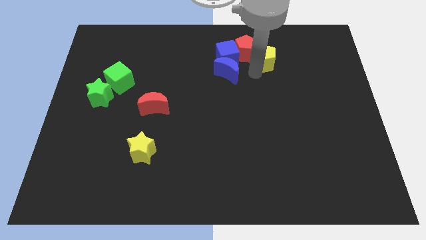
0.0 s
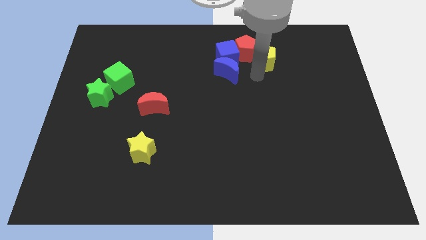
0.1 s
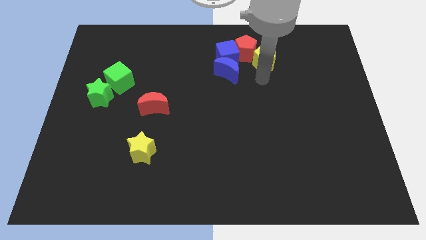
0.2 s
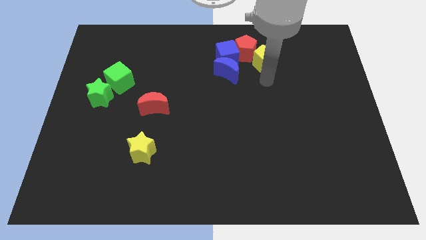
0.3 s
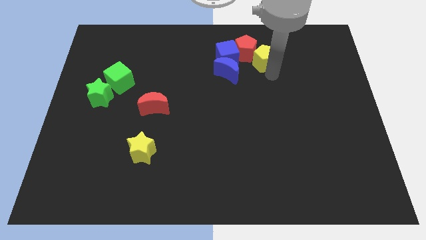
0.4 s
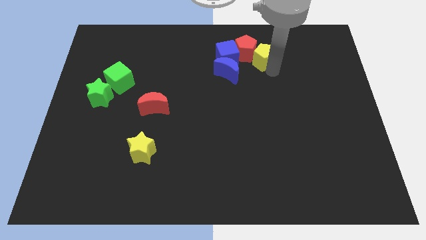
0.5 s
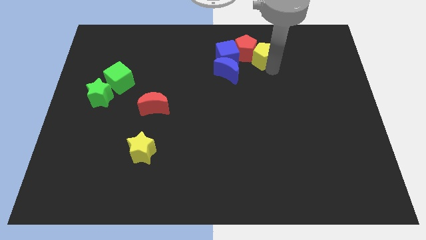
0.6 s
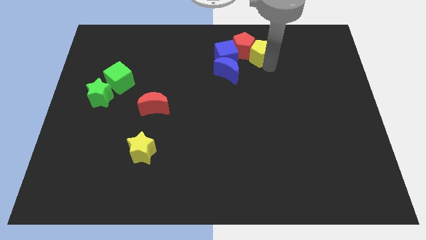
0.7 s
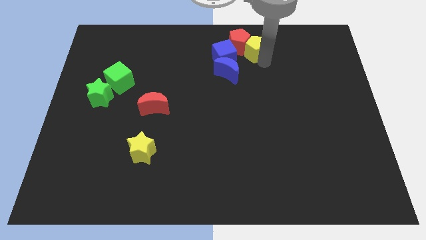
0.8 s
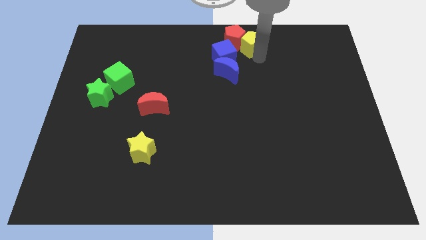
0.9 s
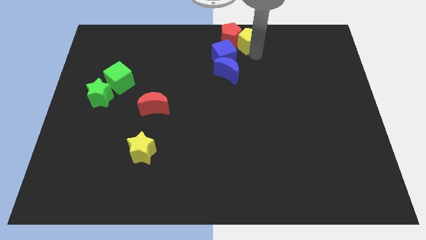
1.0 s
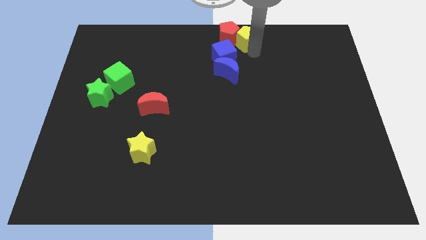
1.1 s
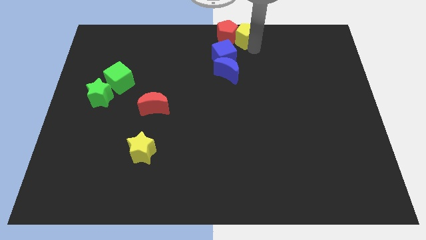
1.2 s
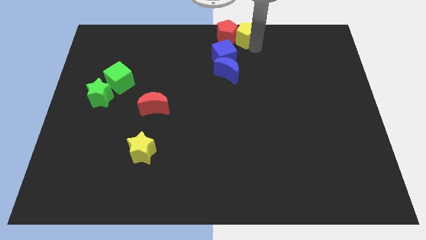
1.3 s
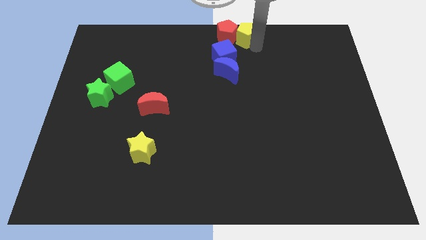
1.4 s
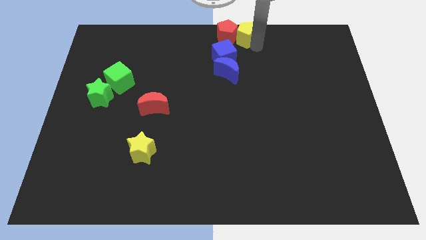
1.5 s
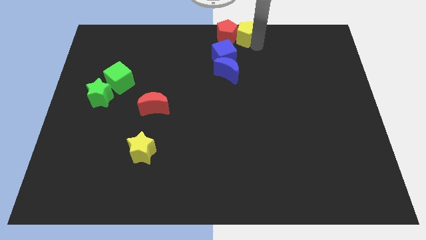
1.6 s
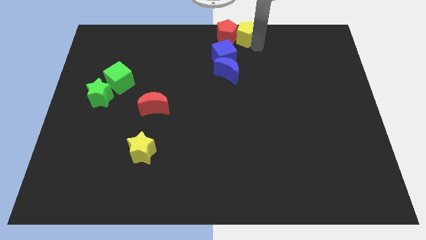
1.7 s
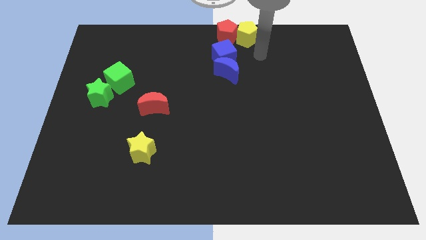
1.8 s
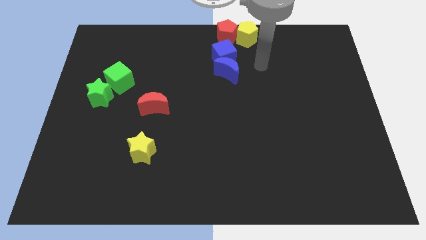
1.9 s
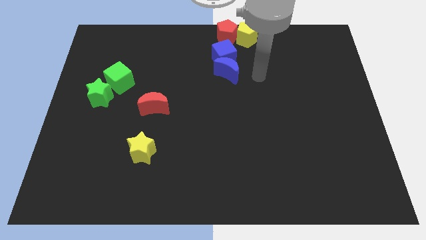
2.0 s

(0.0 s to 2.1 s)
push the pentagons on top of blue cube

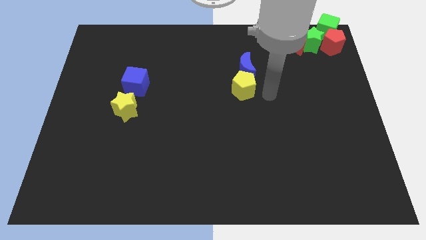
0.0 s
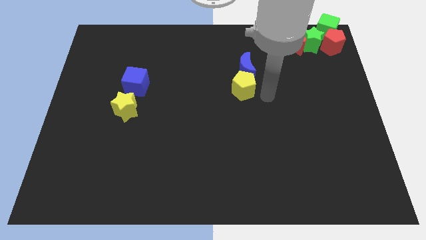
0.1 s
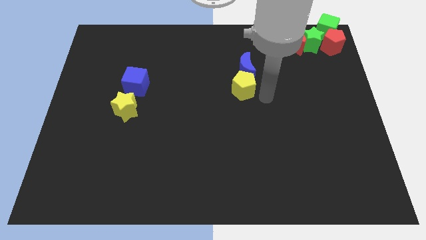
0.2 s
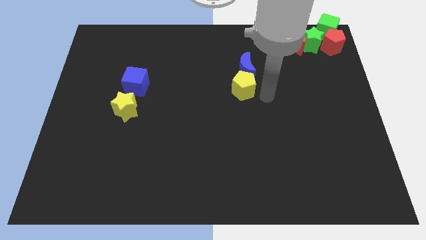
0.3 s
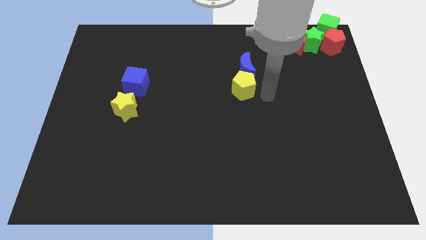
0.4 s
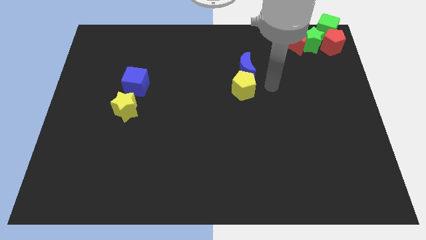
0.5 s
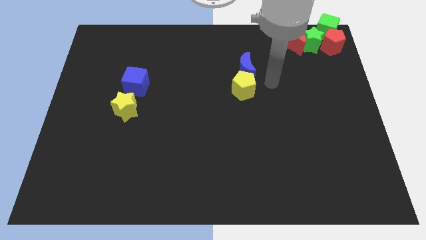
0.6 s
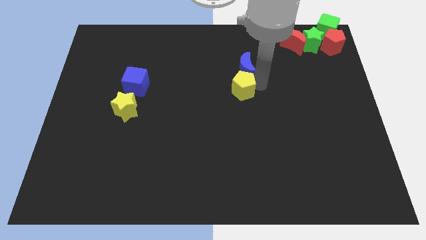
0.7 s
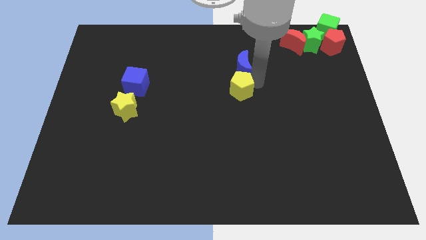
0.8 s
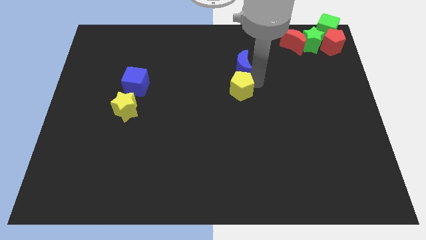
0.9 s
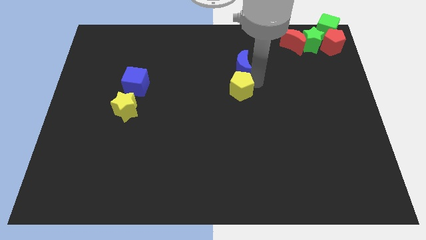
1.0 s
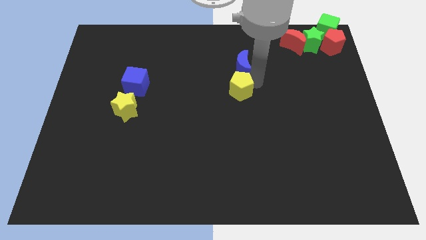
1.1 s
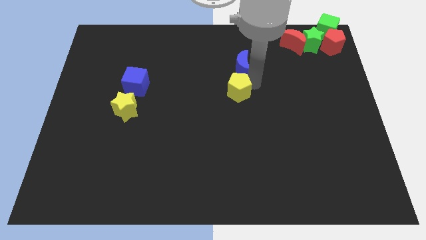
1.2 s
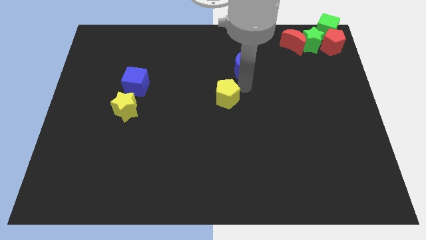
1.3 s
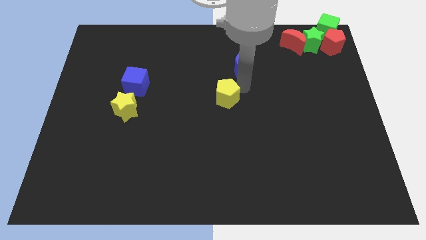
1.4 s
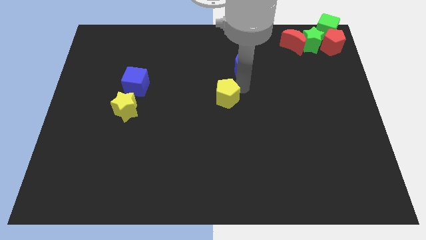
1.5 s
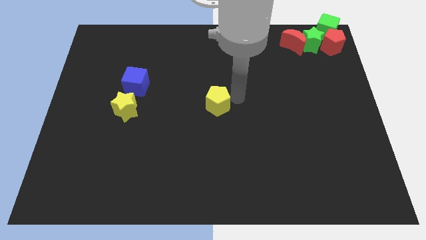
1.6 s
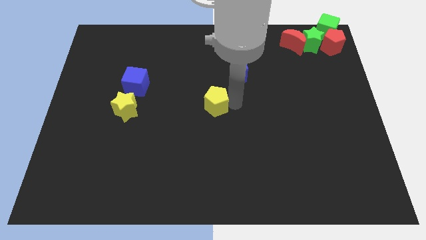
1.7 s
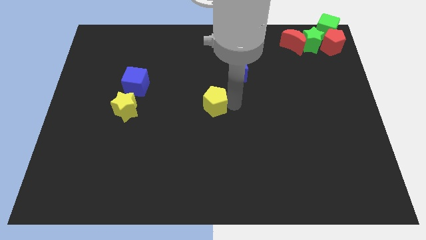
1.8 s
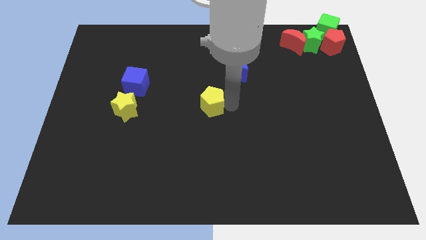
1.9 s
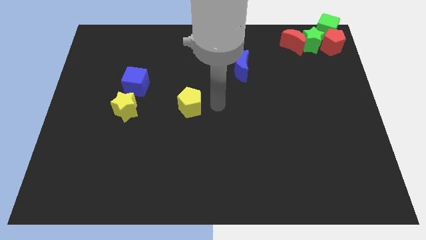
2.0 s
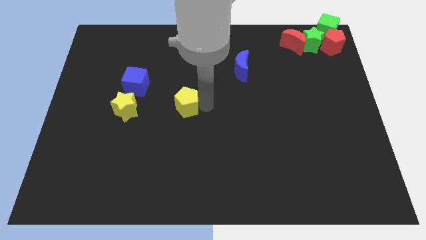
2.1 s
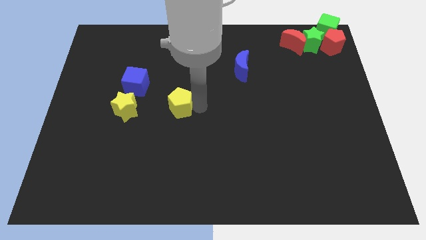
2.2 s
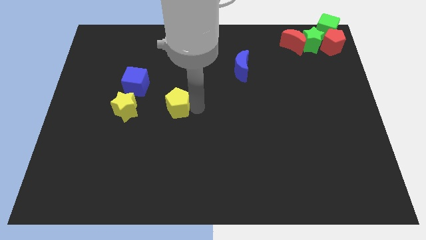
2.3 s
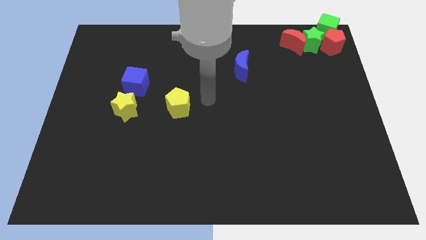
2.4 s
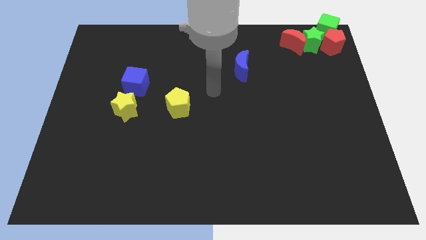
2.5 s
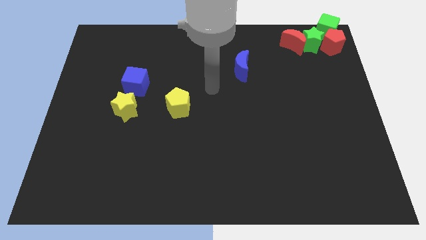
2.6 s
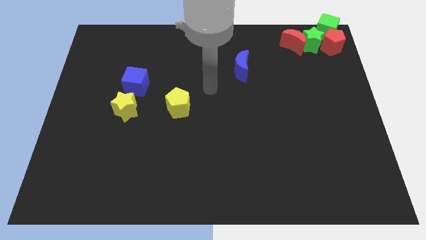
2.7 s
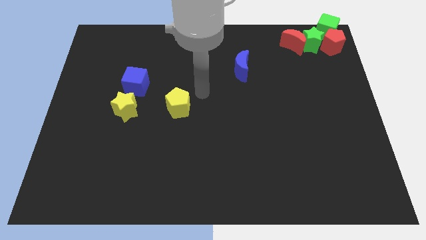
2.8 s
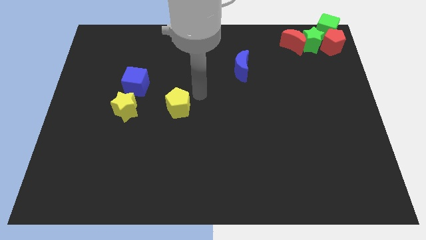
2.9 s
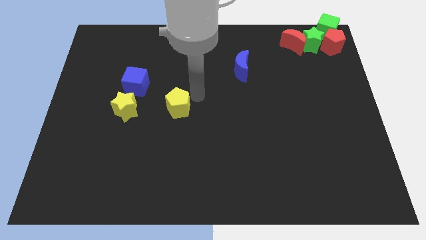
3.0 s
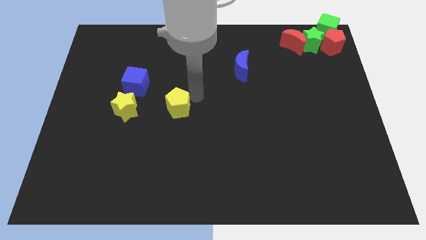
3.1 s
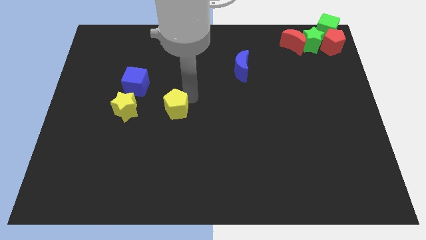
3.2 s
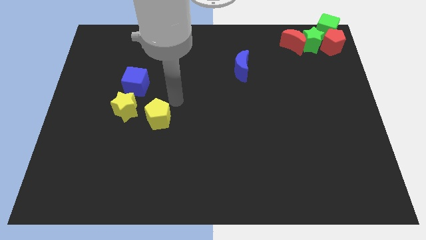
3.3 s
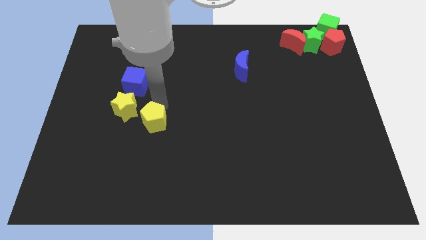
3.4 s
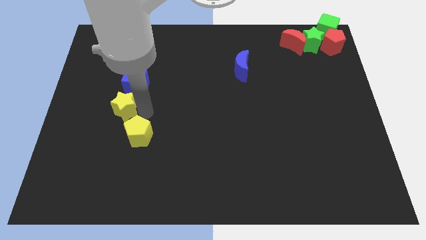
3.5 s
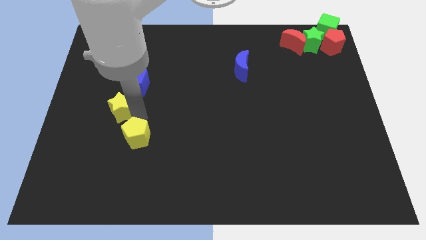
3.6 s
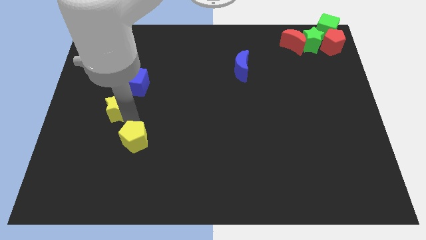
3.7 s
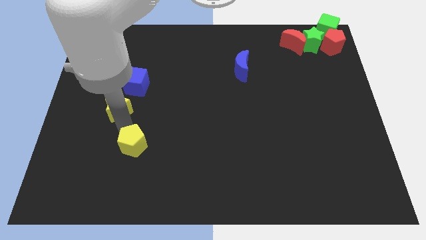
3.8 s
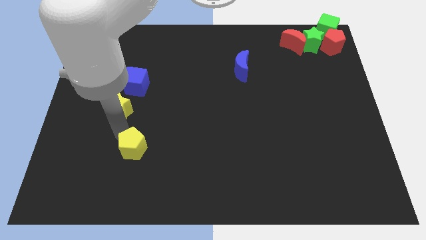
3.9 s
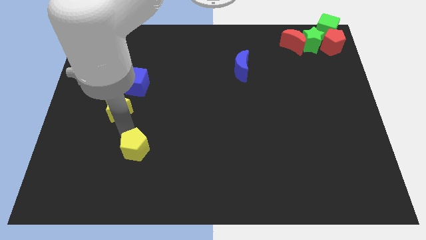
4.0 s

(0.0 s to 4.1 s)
separate yellow pentagon from blue moon

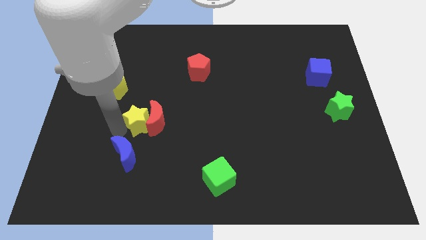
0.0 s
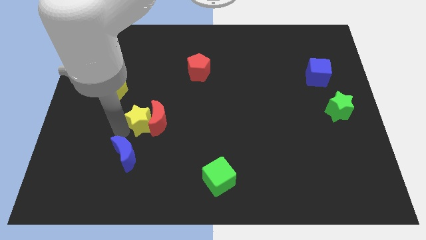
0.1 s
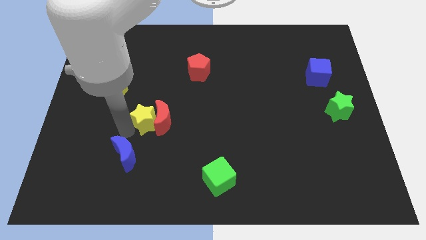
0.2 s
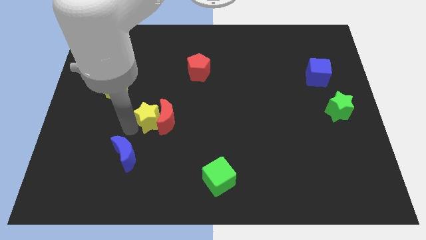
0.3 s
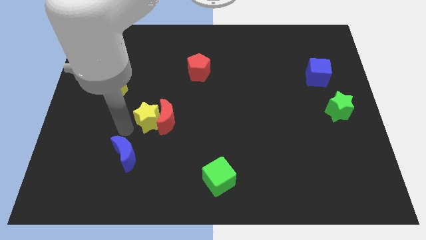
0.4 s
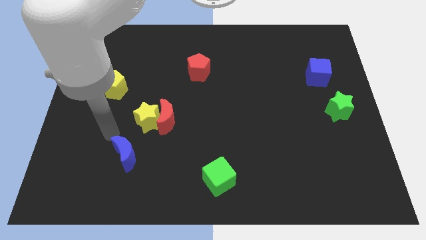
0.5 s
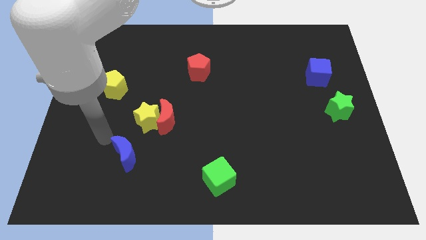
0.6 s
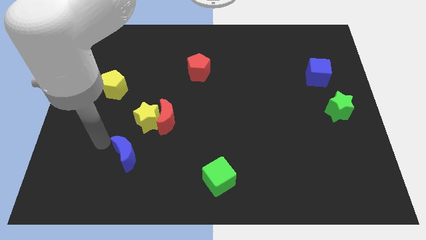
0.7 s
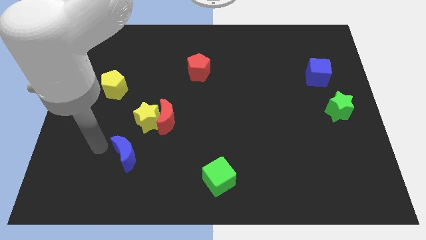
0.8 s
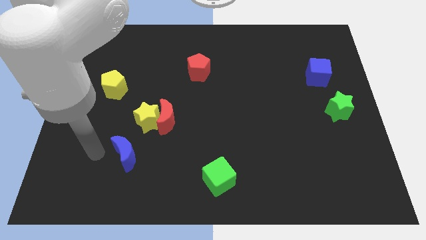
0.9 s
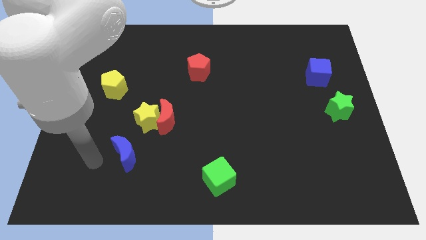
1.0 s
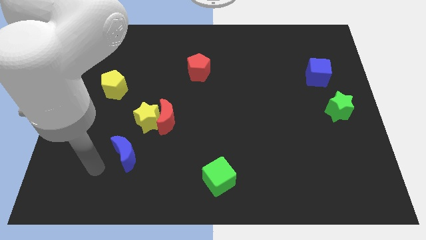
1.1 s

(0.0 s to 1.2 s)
move the yellow star into red crescent

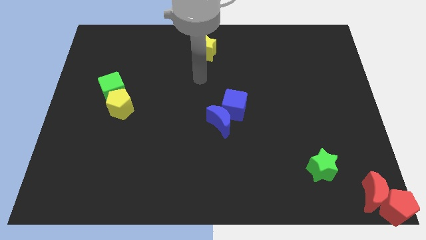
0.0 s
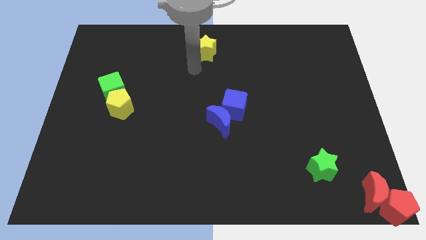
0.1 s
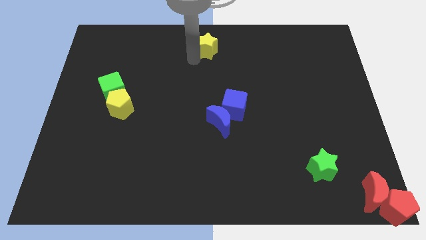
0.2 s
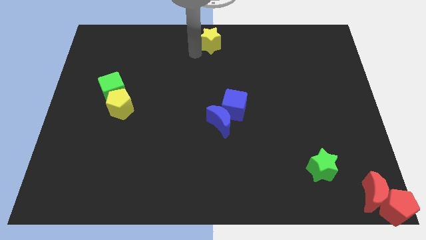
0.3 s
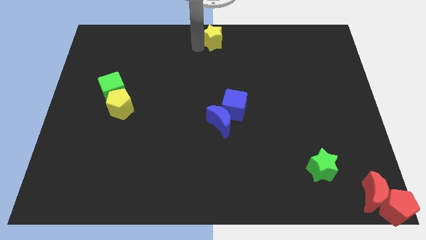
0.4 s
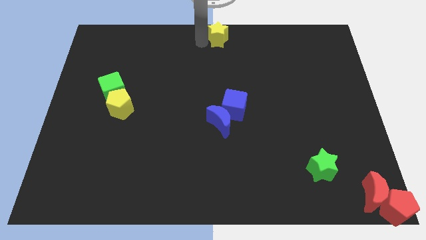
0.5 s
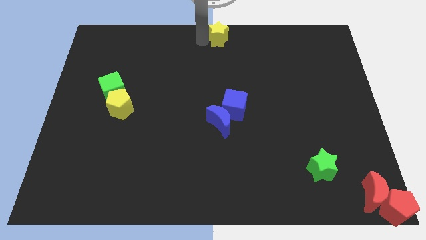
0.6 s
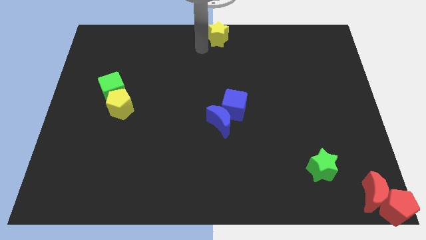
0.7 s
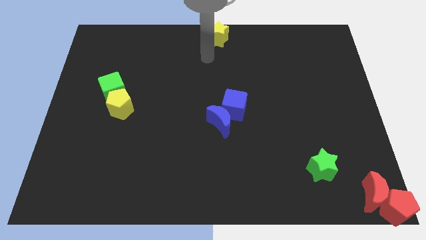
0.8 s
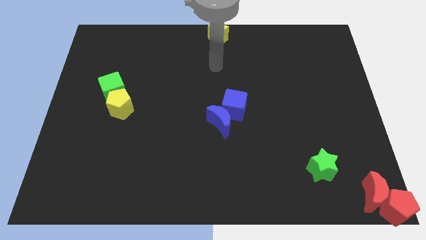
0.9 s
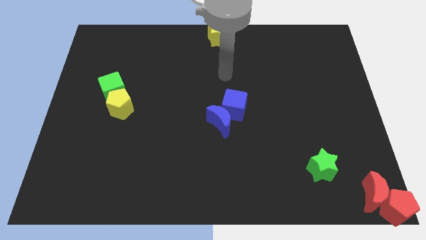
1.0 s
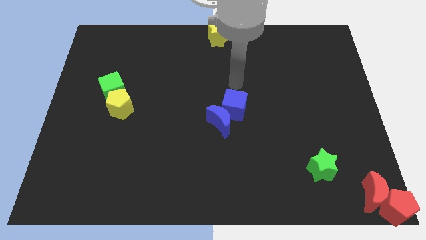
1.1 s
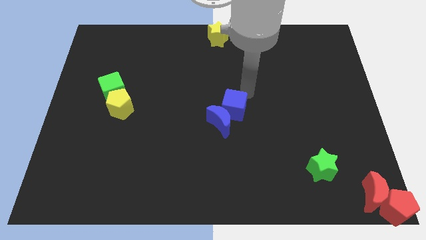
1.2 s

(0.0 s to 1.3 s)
push the yellow star to the top center of the board

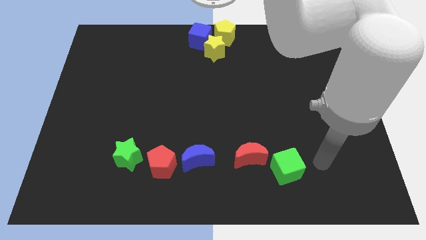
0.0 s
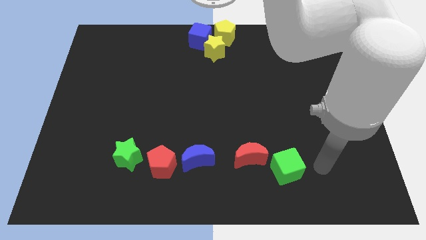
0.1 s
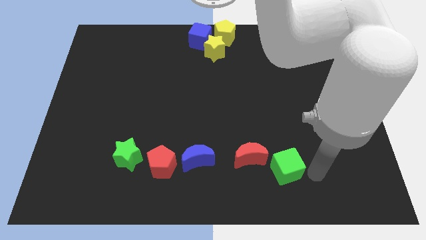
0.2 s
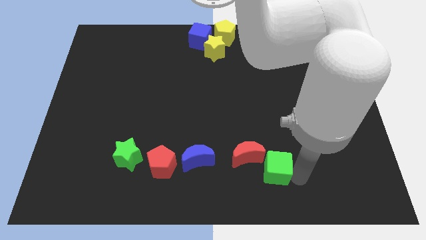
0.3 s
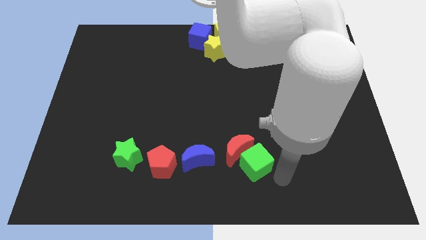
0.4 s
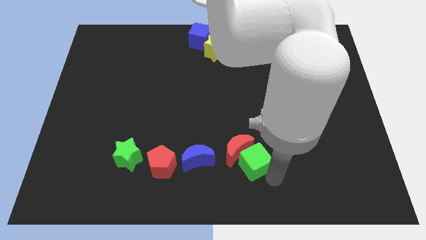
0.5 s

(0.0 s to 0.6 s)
place green cube below red crescent
